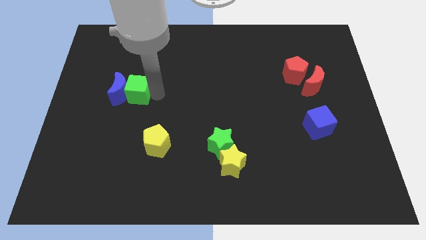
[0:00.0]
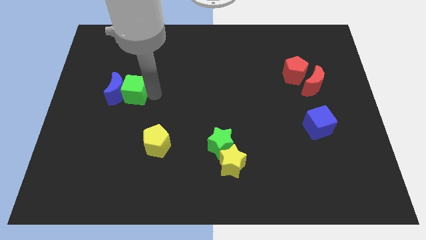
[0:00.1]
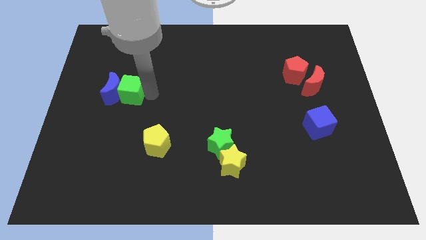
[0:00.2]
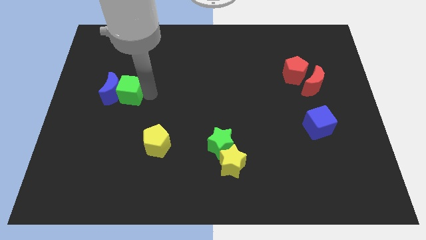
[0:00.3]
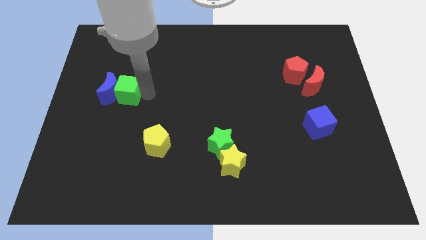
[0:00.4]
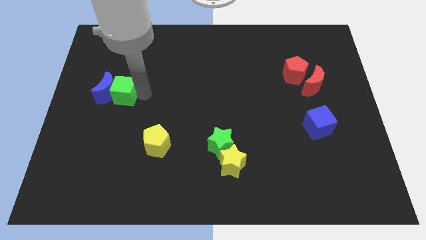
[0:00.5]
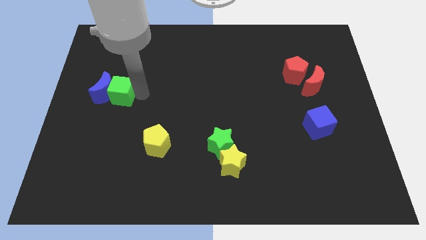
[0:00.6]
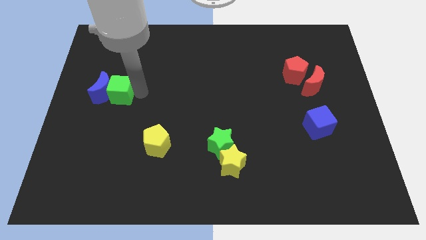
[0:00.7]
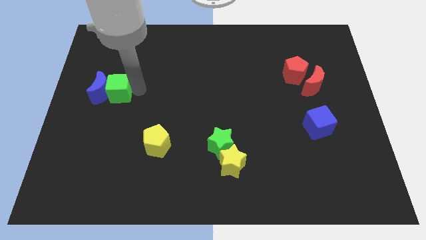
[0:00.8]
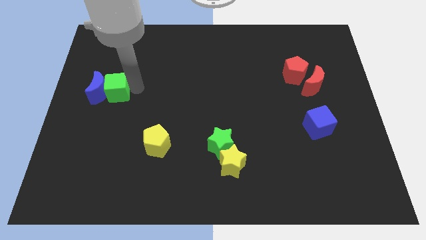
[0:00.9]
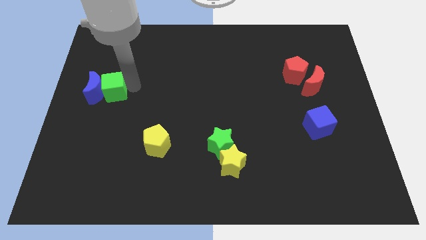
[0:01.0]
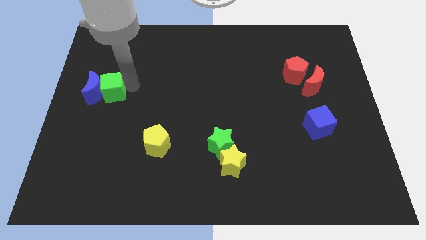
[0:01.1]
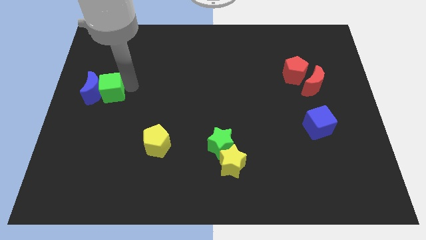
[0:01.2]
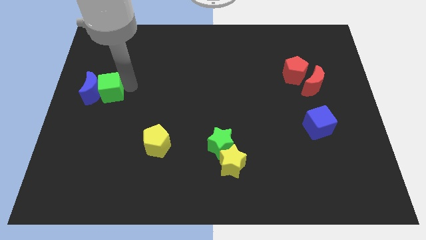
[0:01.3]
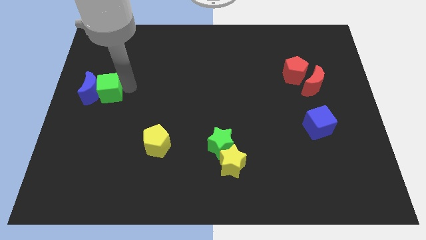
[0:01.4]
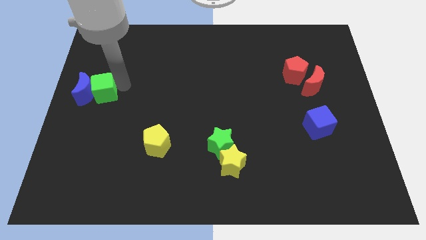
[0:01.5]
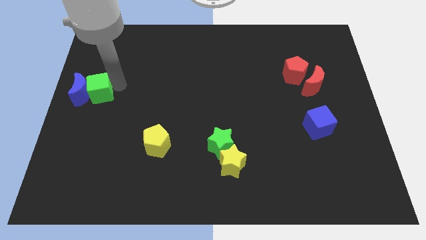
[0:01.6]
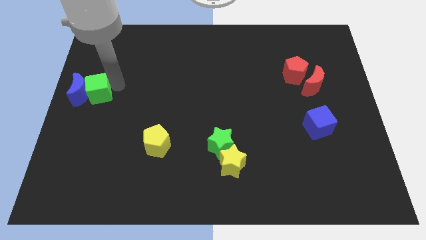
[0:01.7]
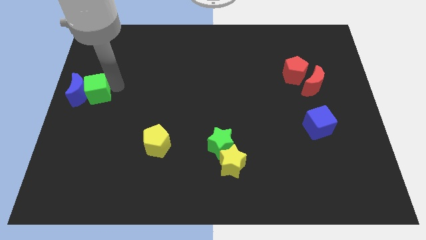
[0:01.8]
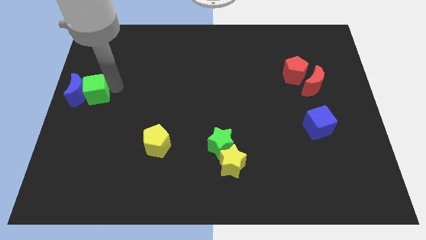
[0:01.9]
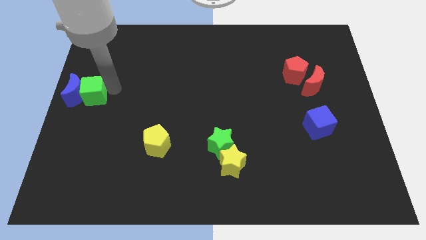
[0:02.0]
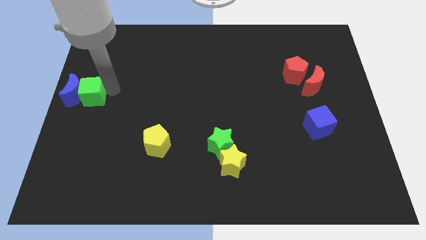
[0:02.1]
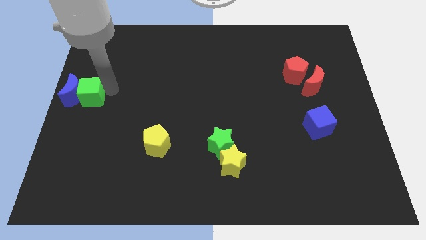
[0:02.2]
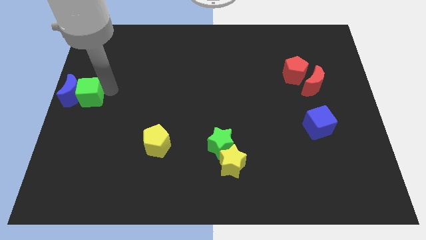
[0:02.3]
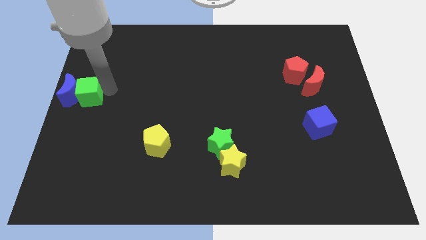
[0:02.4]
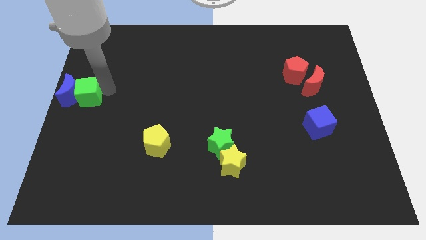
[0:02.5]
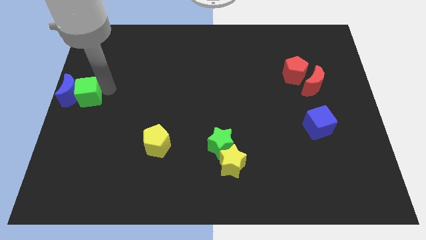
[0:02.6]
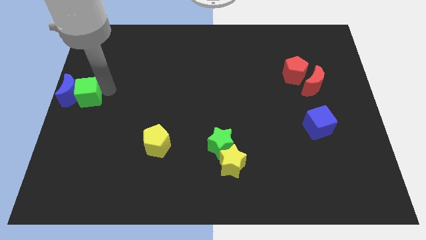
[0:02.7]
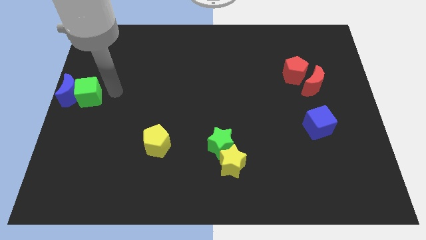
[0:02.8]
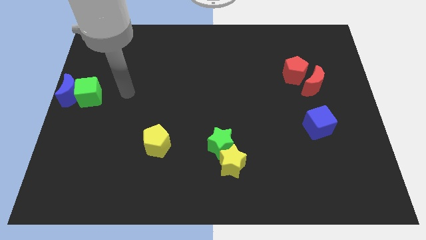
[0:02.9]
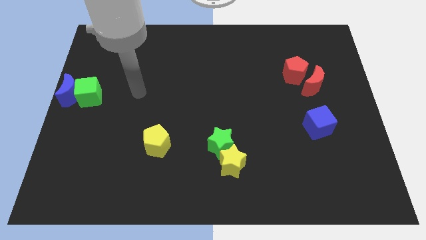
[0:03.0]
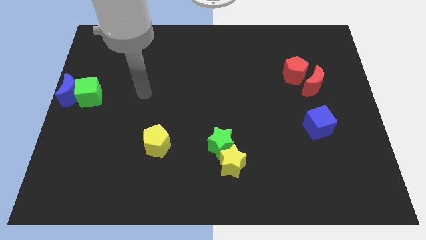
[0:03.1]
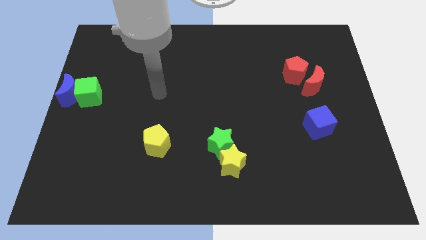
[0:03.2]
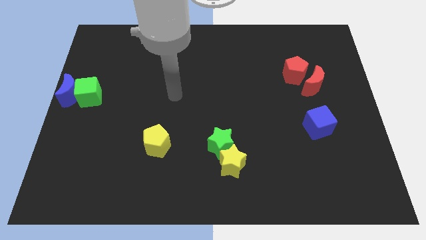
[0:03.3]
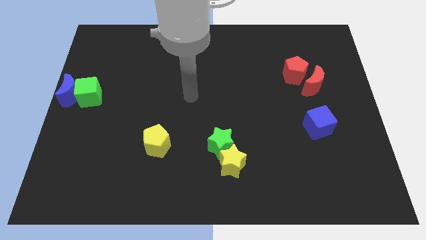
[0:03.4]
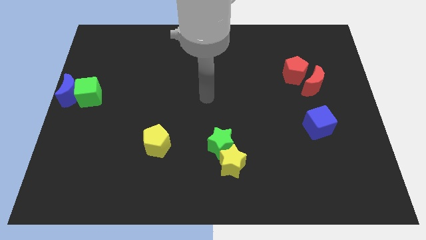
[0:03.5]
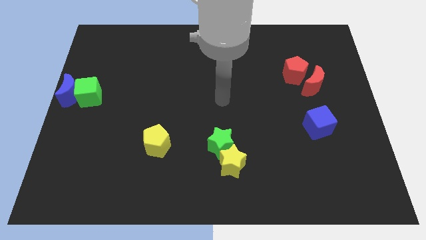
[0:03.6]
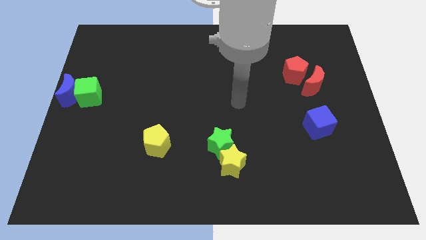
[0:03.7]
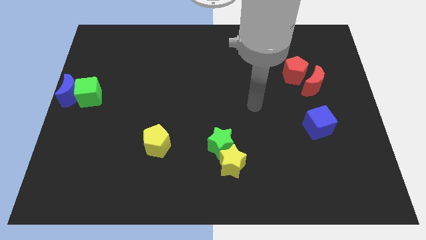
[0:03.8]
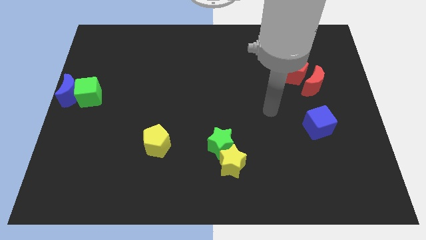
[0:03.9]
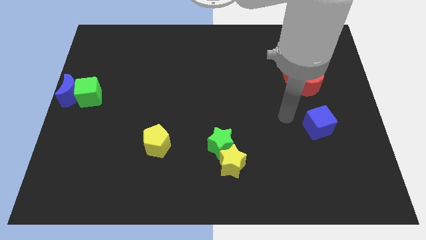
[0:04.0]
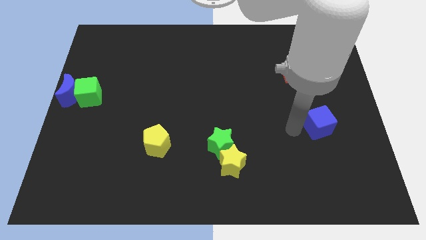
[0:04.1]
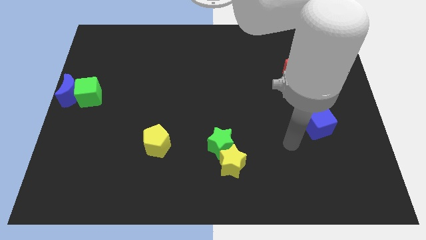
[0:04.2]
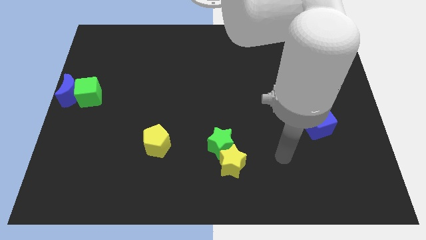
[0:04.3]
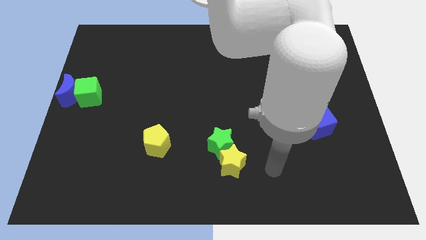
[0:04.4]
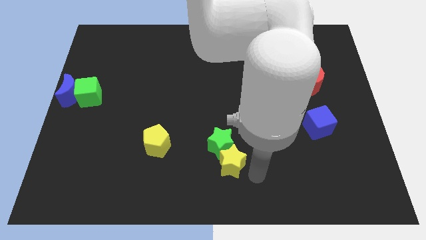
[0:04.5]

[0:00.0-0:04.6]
push the green cube and bluemoon towards the left center of the board

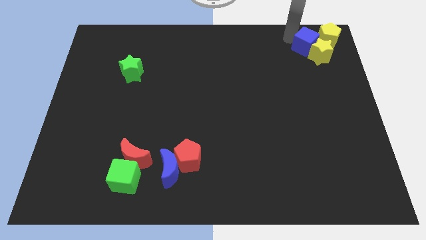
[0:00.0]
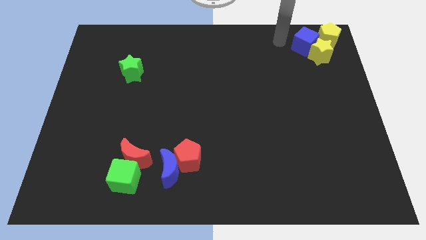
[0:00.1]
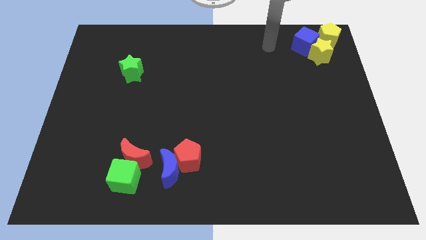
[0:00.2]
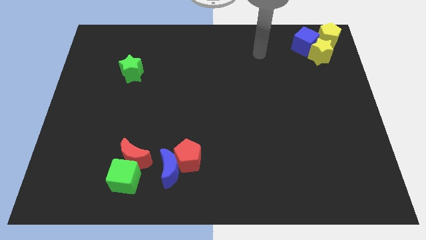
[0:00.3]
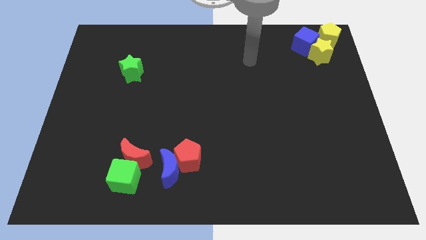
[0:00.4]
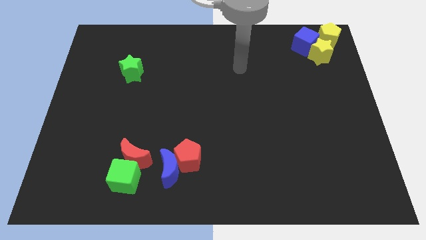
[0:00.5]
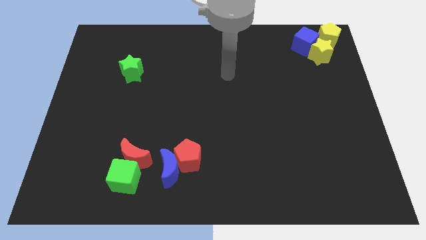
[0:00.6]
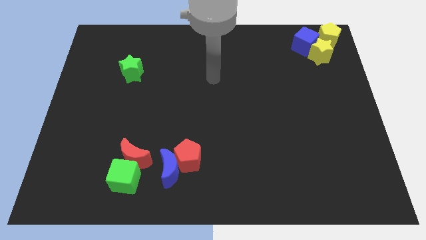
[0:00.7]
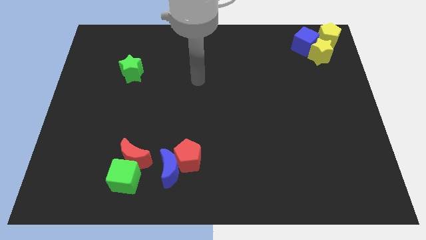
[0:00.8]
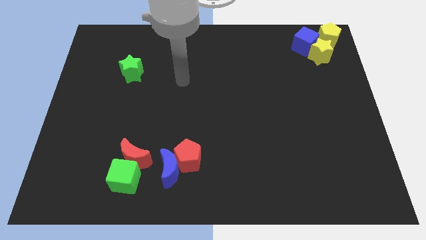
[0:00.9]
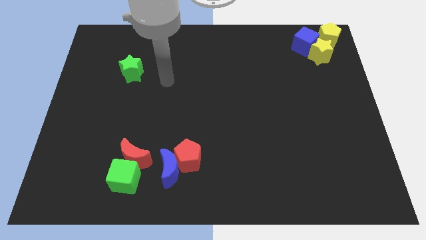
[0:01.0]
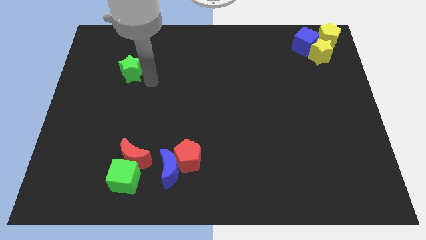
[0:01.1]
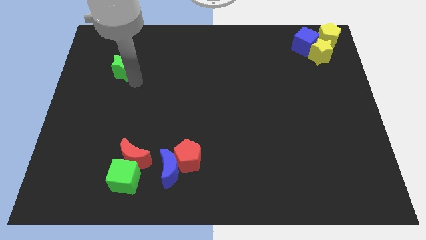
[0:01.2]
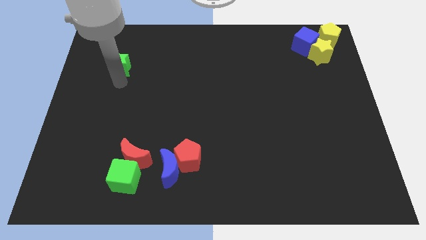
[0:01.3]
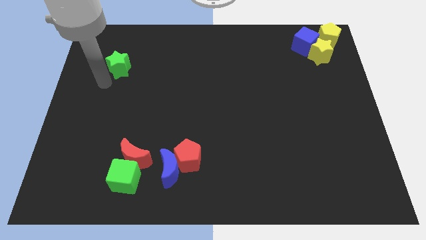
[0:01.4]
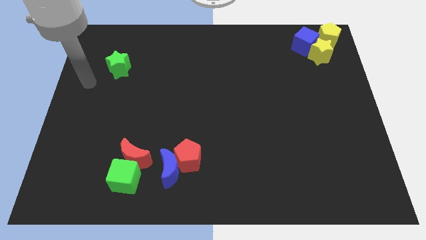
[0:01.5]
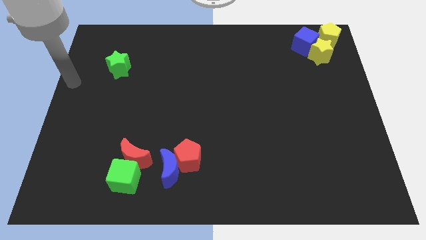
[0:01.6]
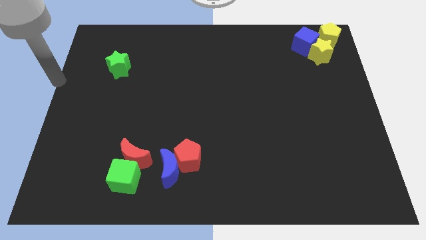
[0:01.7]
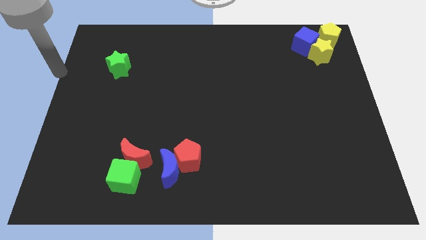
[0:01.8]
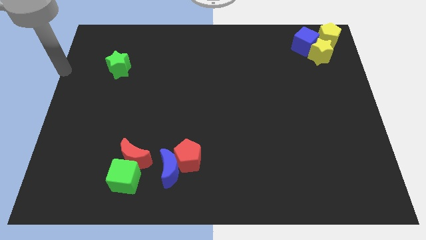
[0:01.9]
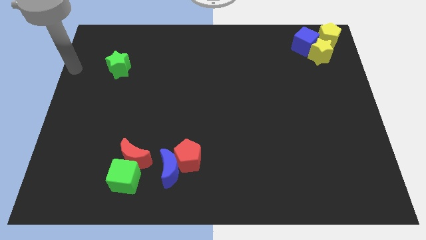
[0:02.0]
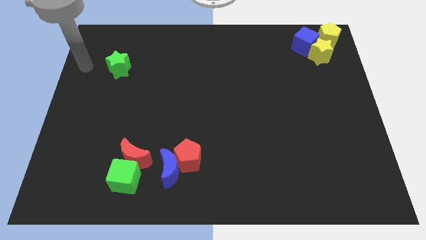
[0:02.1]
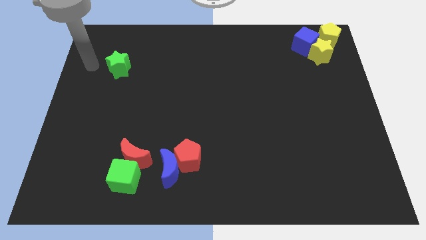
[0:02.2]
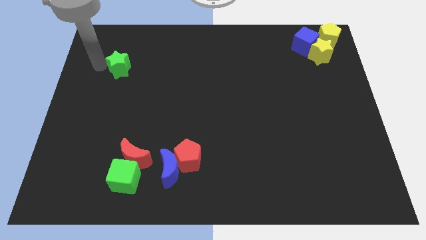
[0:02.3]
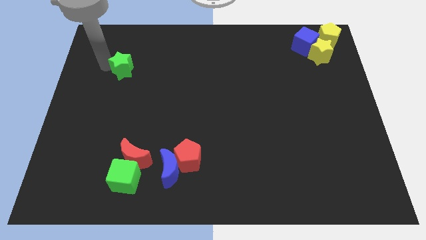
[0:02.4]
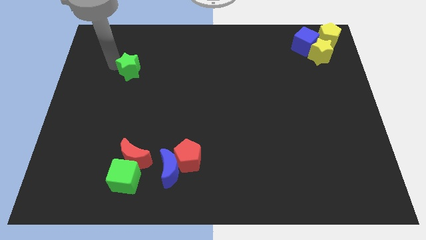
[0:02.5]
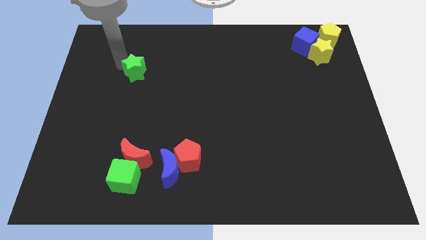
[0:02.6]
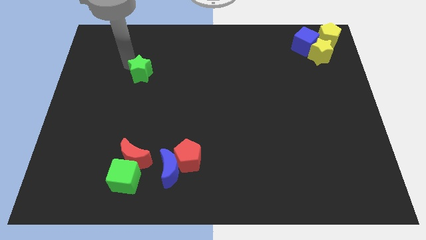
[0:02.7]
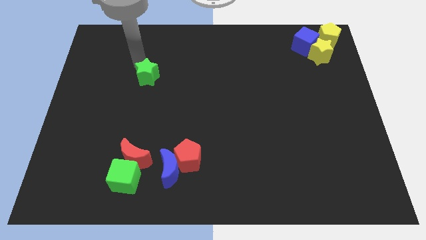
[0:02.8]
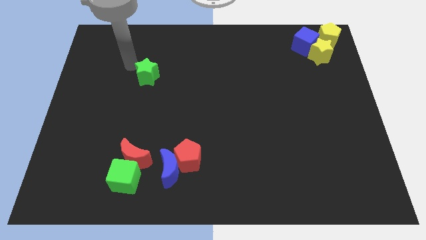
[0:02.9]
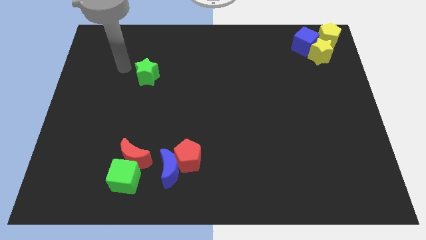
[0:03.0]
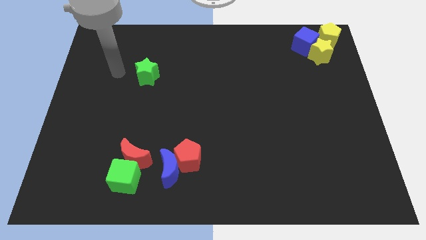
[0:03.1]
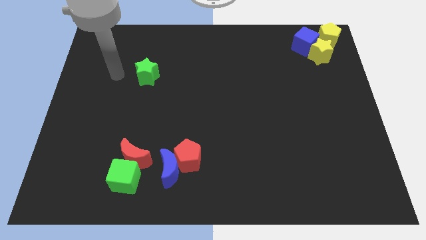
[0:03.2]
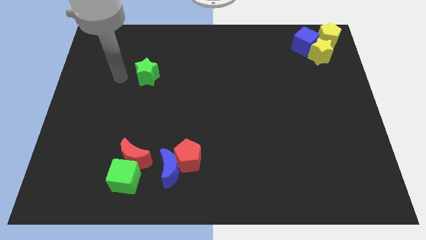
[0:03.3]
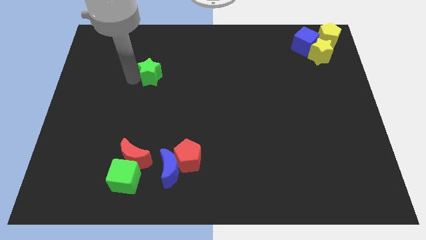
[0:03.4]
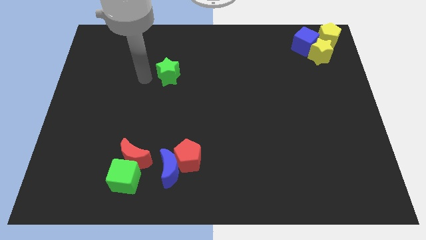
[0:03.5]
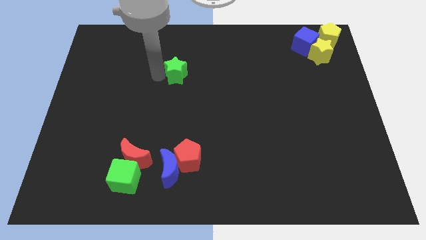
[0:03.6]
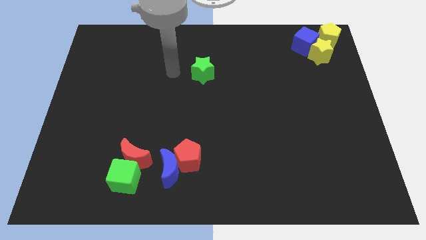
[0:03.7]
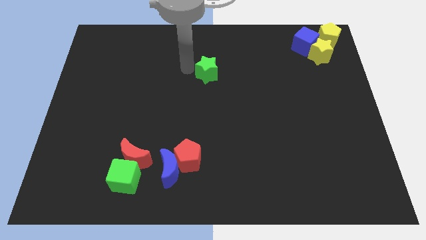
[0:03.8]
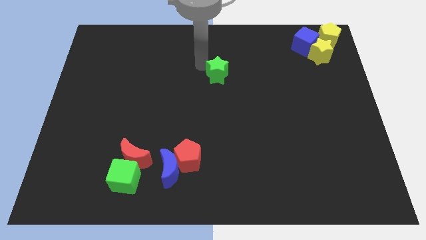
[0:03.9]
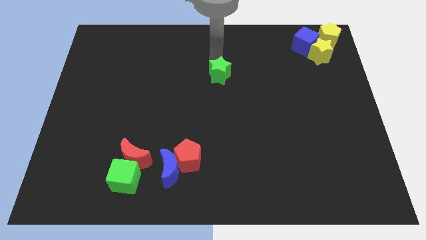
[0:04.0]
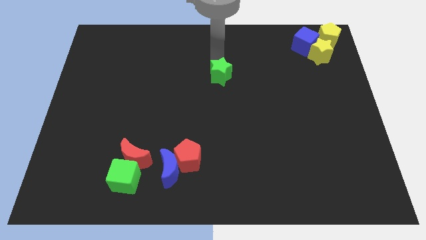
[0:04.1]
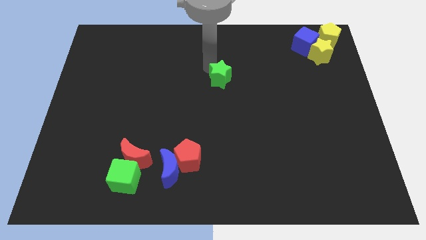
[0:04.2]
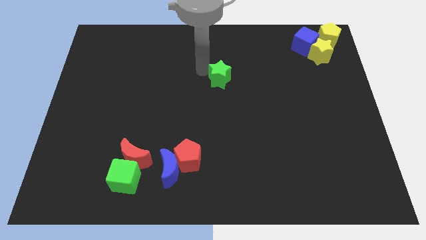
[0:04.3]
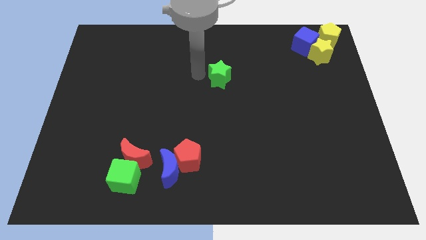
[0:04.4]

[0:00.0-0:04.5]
move green star to the center
